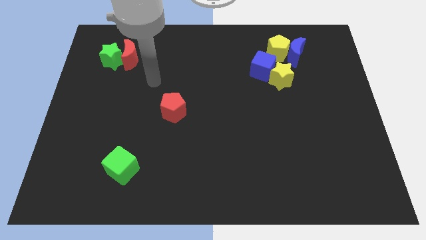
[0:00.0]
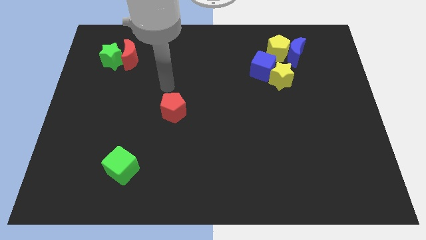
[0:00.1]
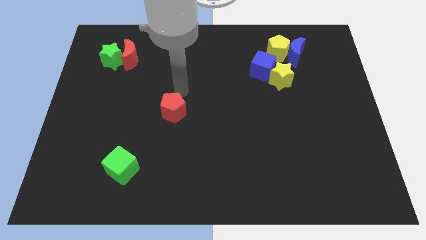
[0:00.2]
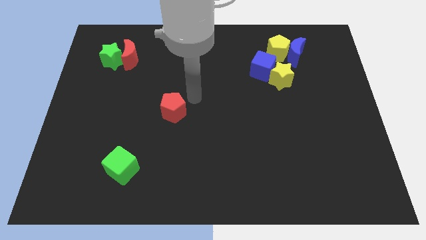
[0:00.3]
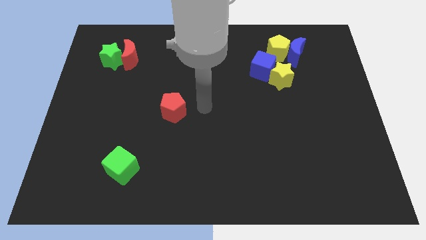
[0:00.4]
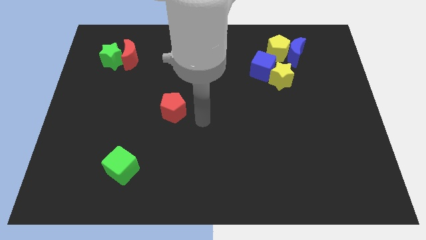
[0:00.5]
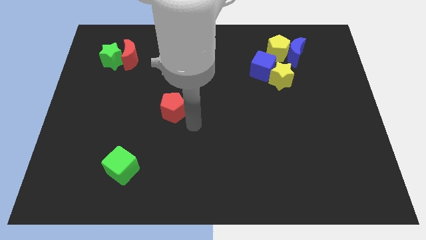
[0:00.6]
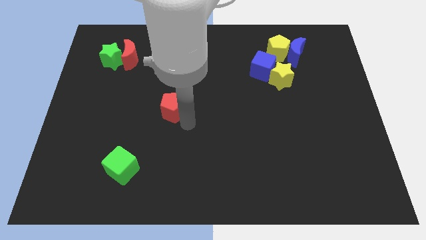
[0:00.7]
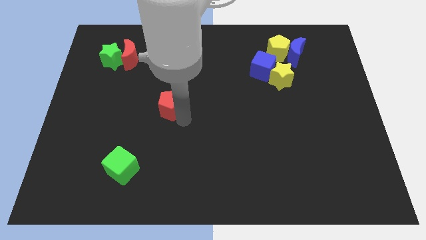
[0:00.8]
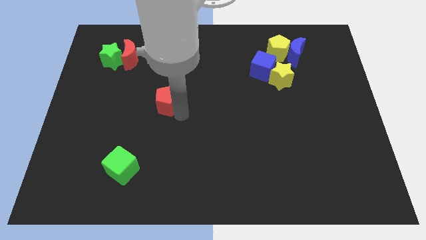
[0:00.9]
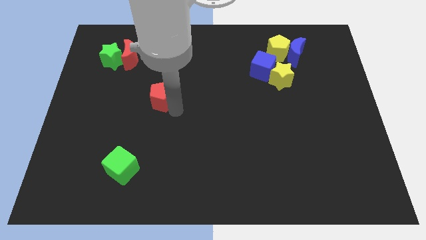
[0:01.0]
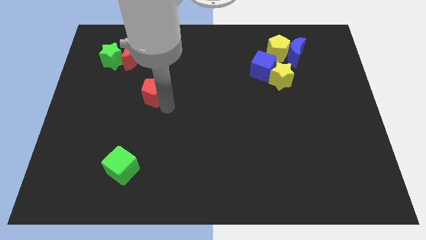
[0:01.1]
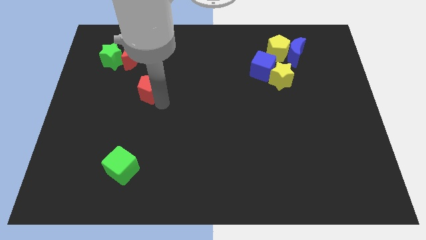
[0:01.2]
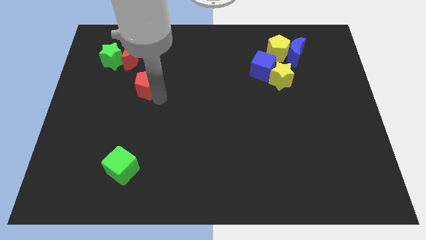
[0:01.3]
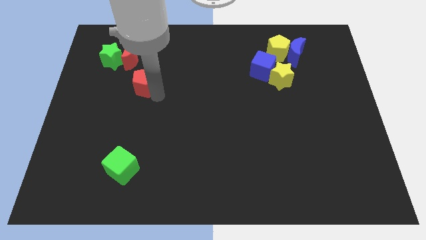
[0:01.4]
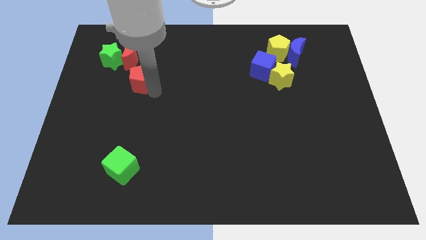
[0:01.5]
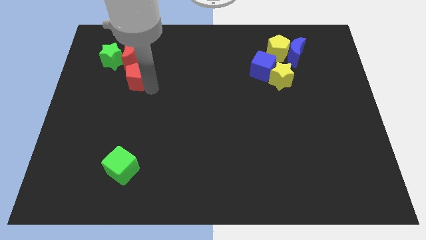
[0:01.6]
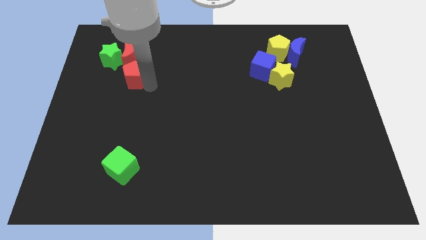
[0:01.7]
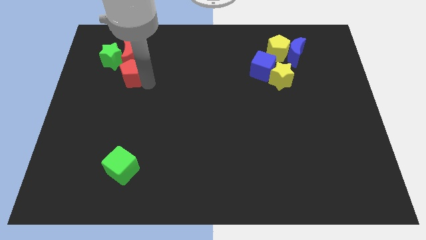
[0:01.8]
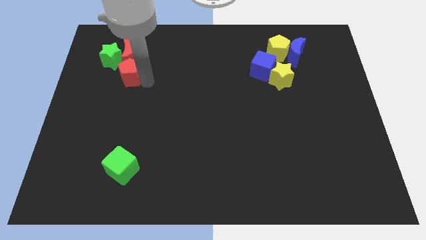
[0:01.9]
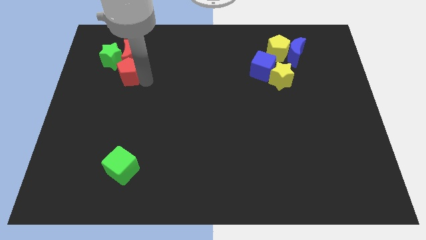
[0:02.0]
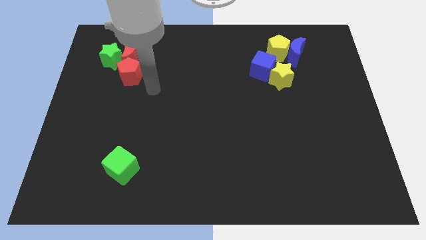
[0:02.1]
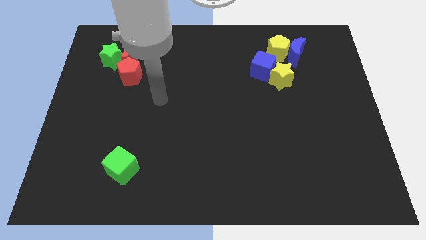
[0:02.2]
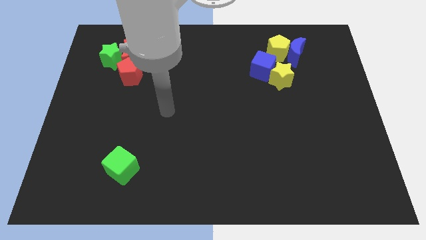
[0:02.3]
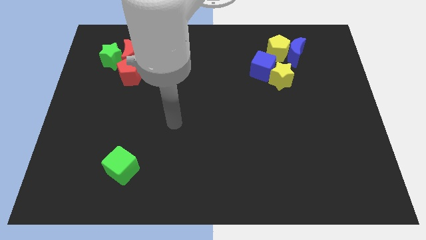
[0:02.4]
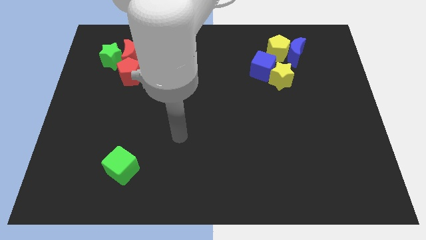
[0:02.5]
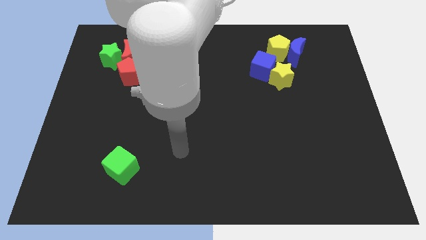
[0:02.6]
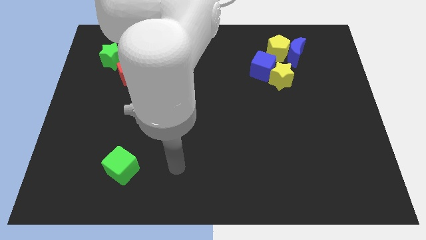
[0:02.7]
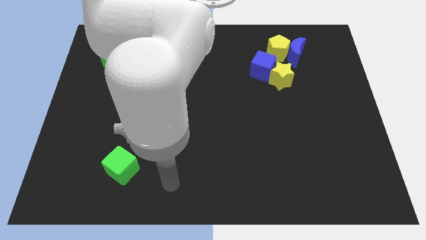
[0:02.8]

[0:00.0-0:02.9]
move the red pentagon to the right of the red crescent

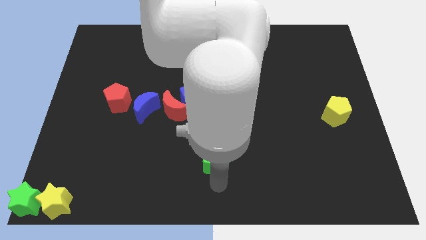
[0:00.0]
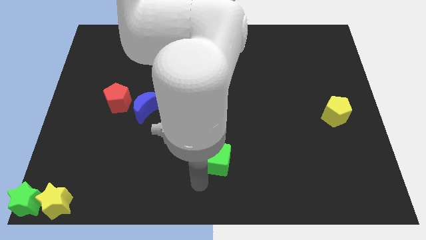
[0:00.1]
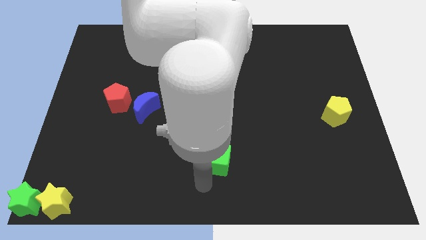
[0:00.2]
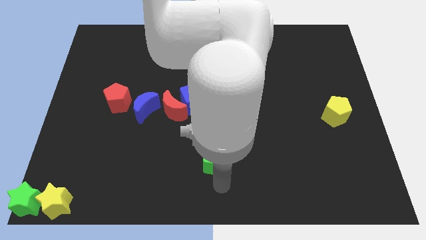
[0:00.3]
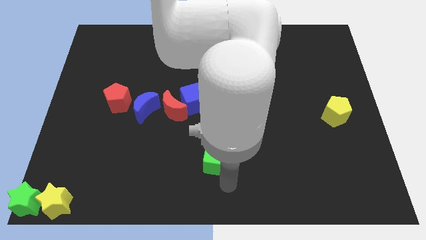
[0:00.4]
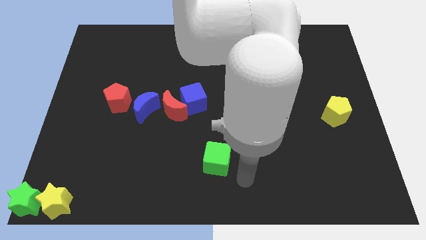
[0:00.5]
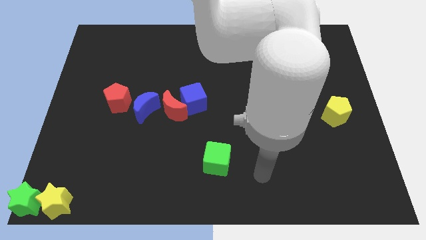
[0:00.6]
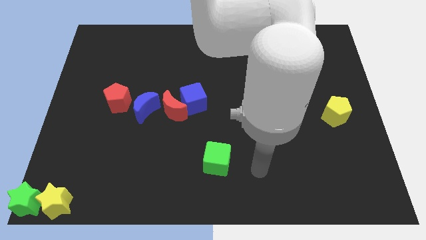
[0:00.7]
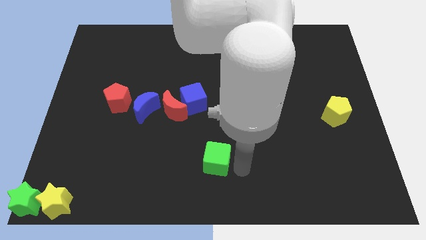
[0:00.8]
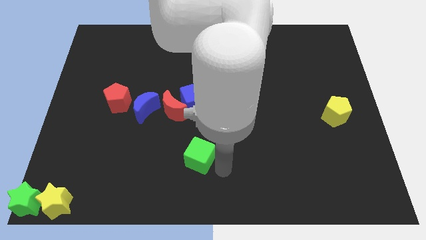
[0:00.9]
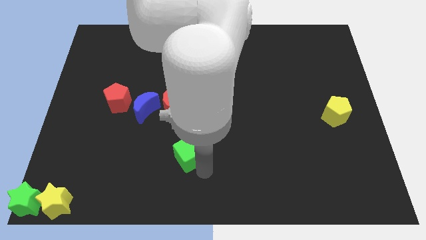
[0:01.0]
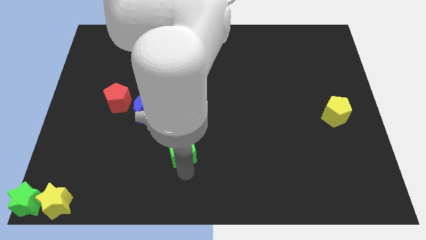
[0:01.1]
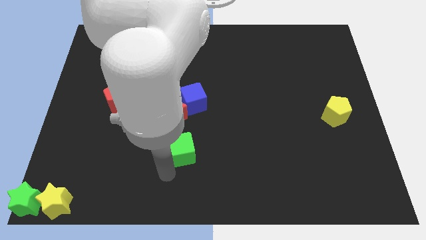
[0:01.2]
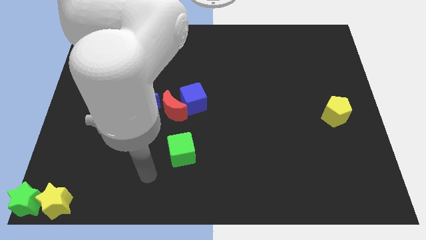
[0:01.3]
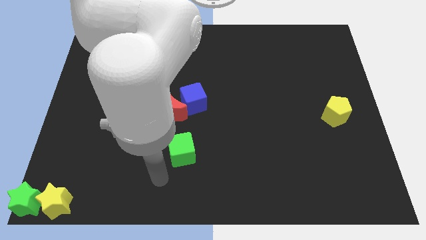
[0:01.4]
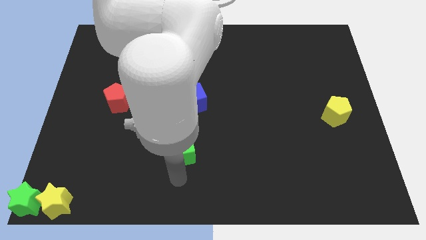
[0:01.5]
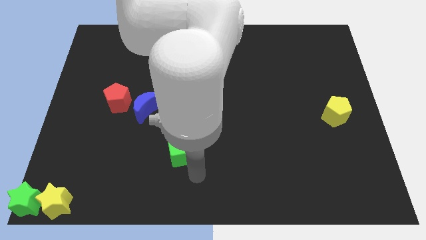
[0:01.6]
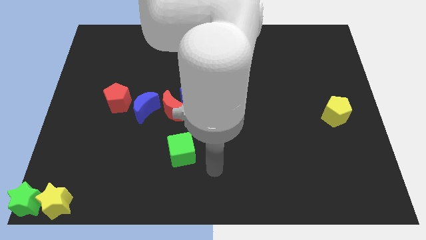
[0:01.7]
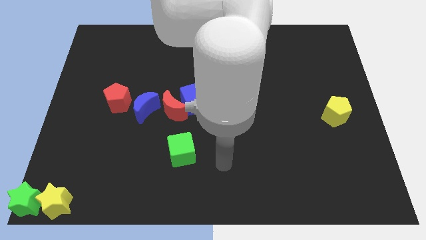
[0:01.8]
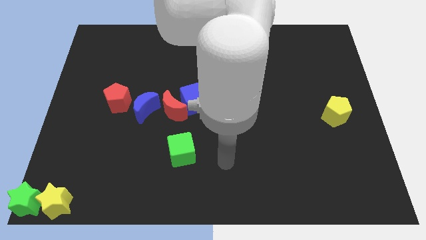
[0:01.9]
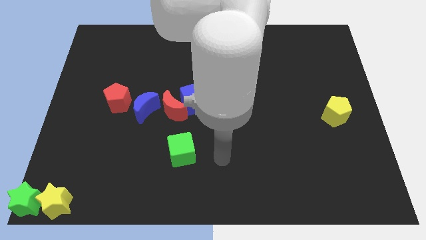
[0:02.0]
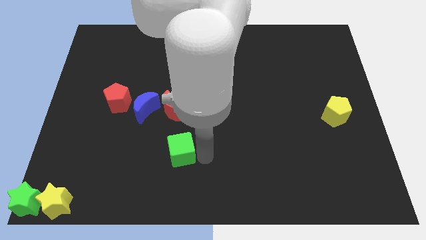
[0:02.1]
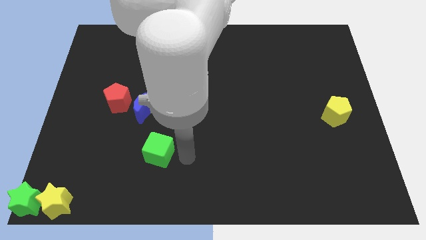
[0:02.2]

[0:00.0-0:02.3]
slide the green cube at the bottom side of the red crescent

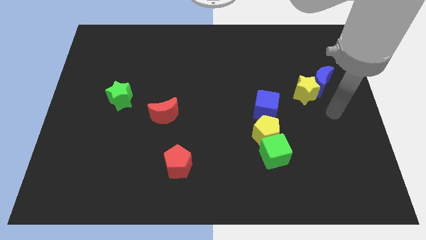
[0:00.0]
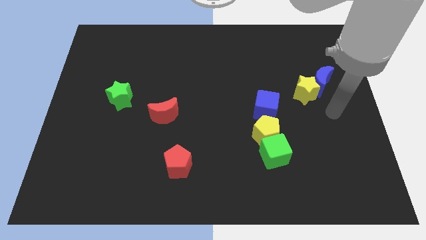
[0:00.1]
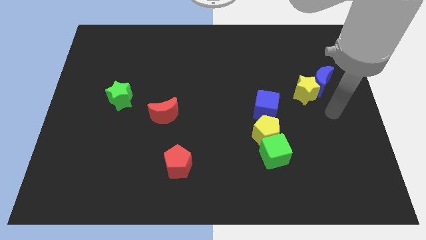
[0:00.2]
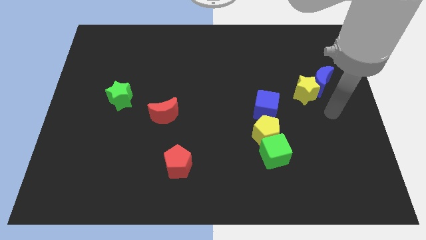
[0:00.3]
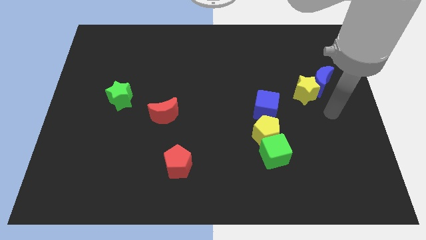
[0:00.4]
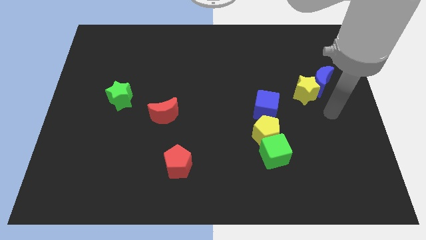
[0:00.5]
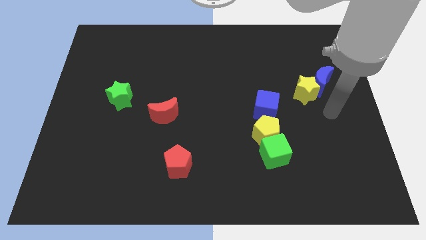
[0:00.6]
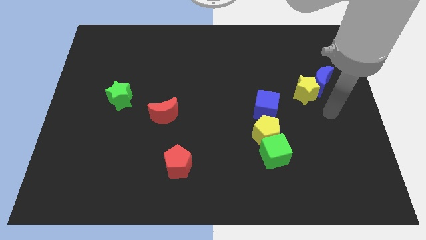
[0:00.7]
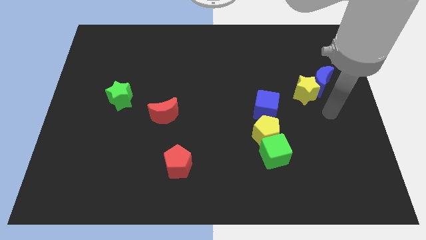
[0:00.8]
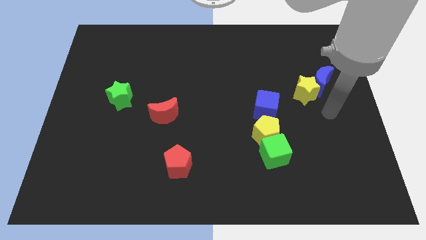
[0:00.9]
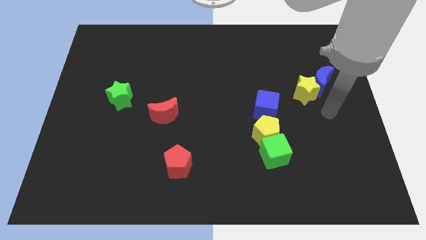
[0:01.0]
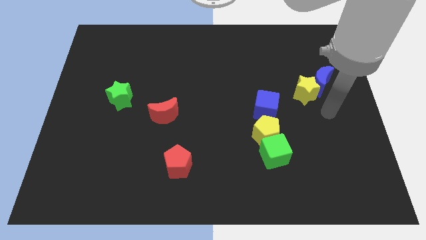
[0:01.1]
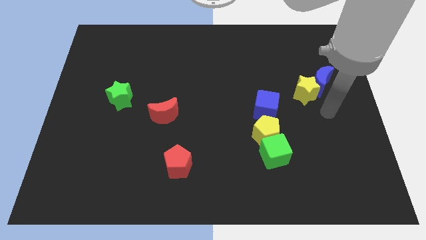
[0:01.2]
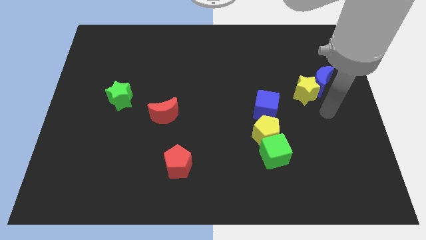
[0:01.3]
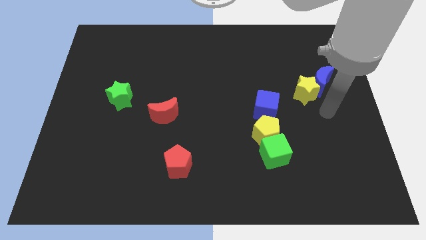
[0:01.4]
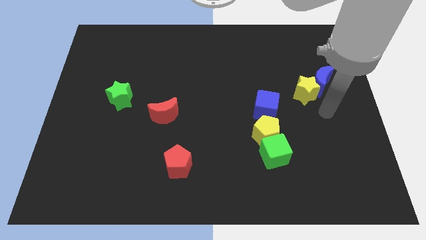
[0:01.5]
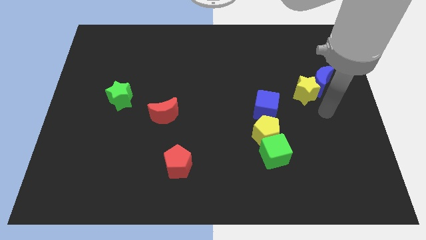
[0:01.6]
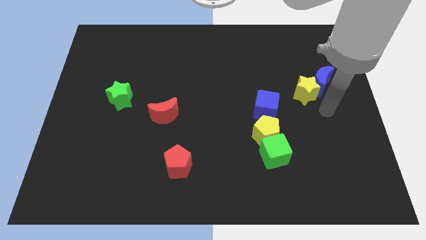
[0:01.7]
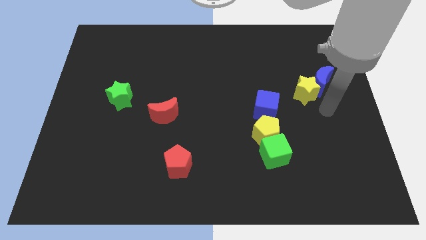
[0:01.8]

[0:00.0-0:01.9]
move the arm slightly towards the blue crescent

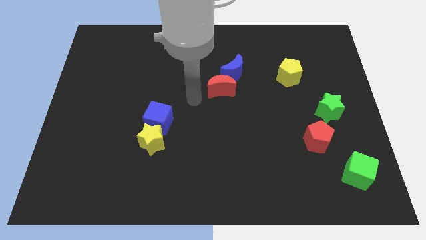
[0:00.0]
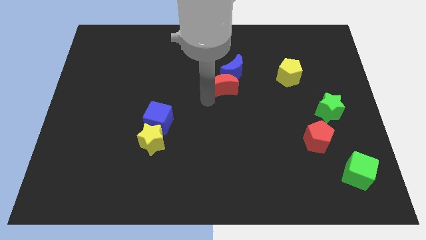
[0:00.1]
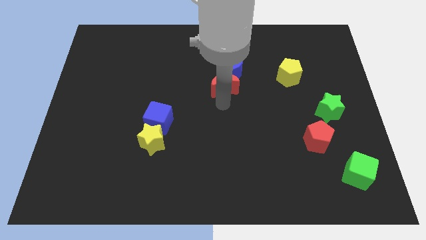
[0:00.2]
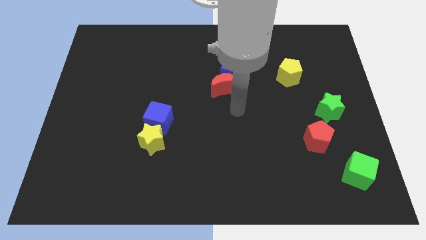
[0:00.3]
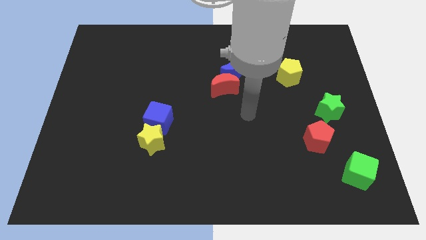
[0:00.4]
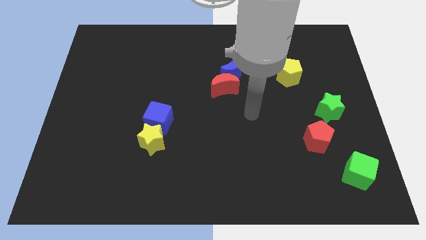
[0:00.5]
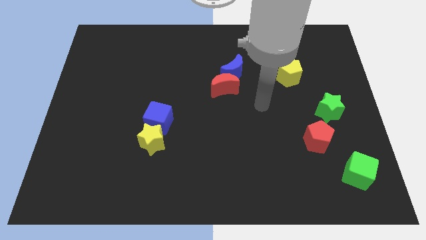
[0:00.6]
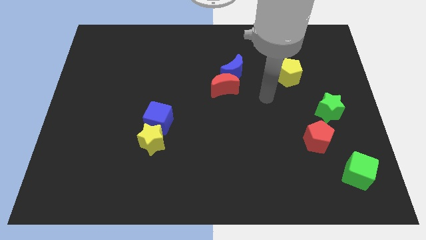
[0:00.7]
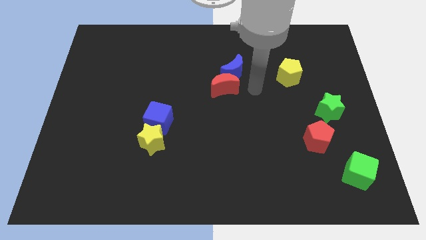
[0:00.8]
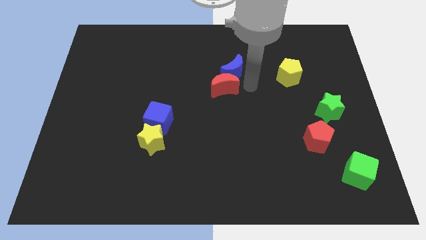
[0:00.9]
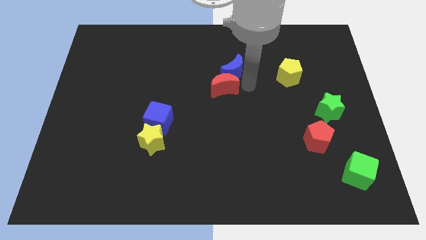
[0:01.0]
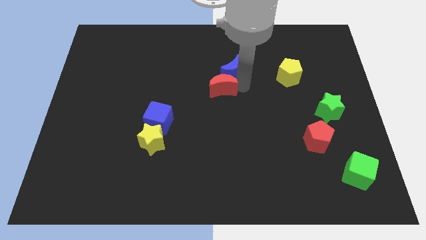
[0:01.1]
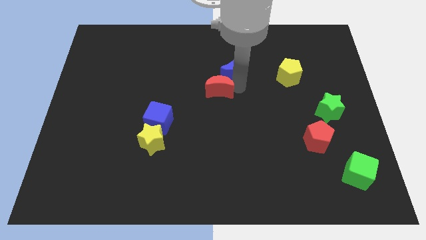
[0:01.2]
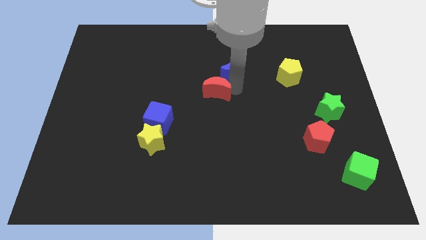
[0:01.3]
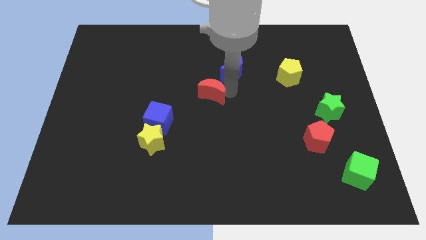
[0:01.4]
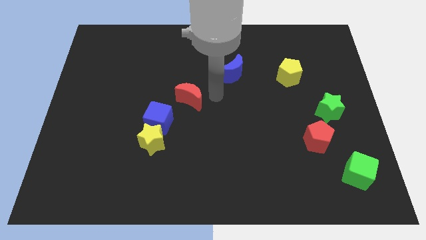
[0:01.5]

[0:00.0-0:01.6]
push the red crescent to the bottom left of the blue crescent

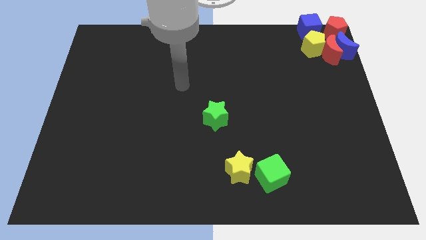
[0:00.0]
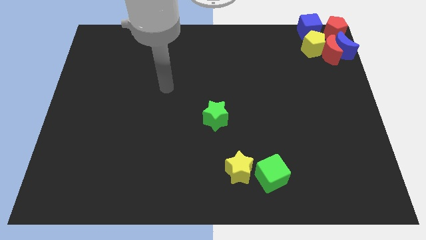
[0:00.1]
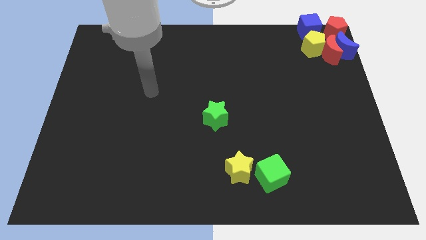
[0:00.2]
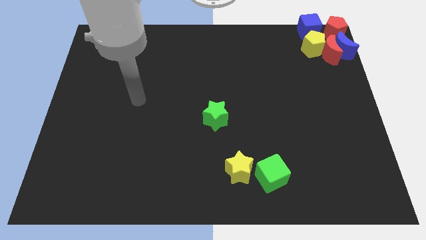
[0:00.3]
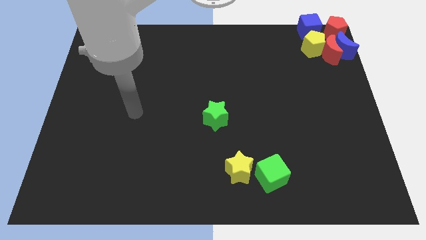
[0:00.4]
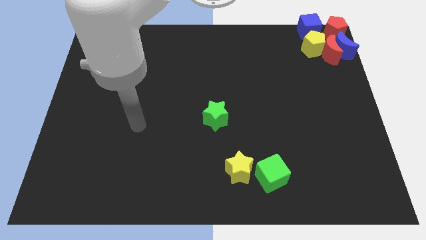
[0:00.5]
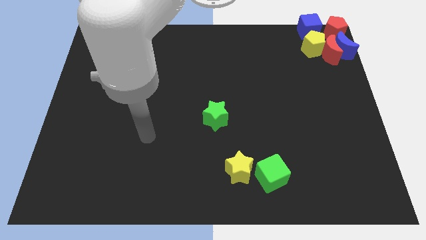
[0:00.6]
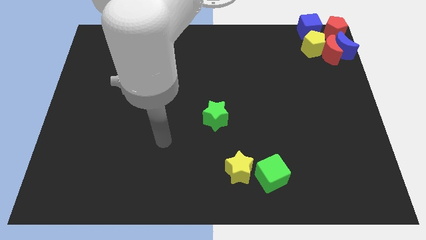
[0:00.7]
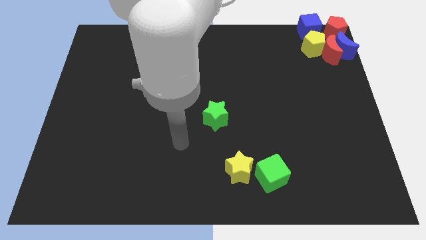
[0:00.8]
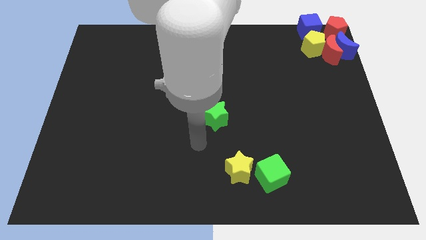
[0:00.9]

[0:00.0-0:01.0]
move your arm below the green star
